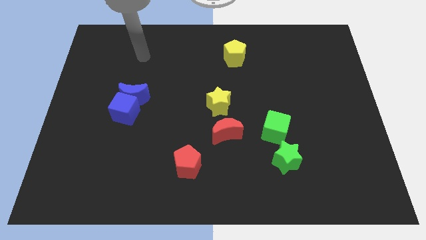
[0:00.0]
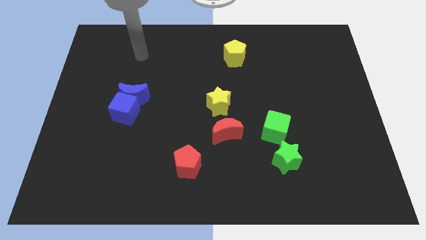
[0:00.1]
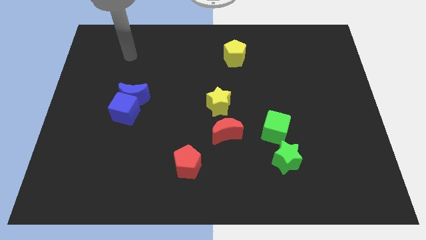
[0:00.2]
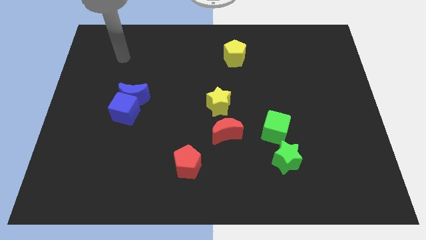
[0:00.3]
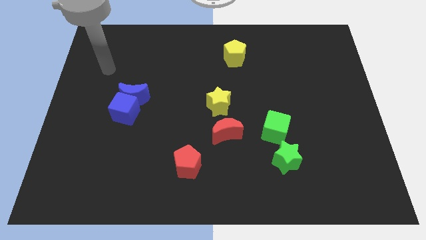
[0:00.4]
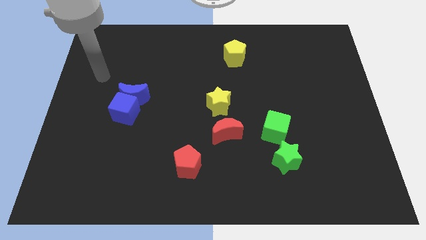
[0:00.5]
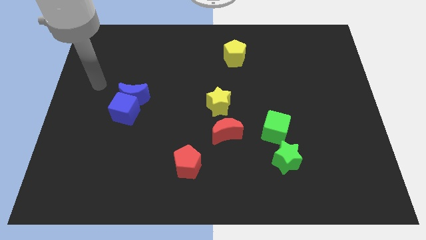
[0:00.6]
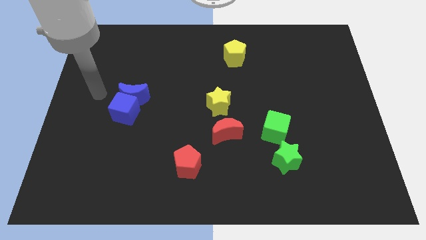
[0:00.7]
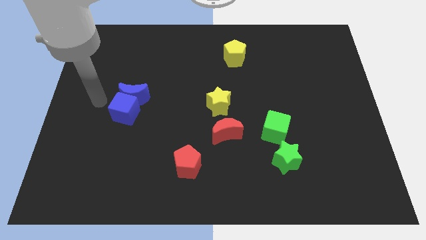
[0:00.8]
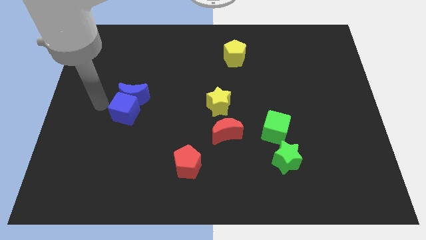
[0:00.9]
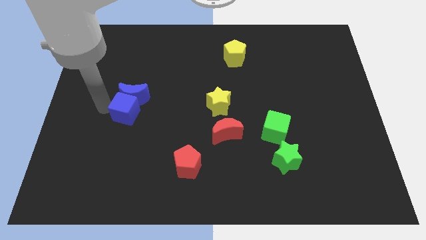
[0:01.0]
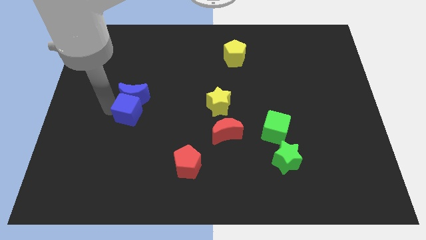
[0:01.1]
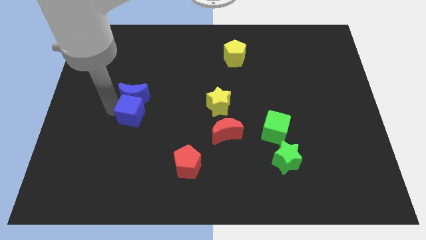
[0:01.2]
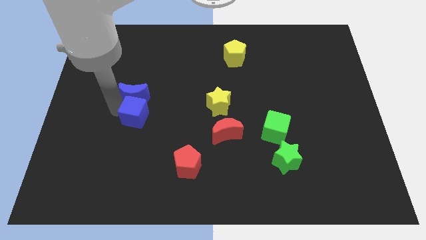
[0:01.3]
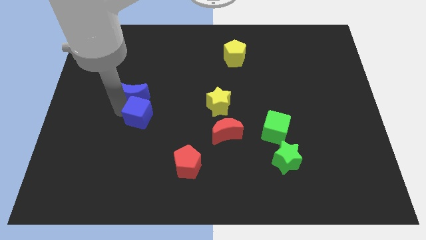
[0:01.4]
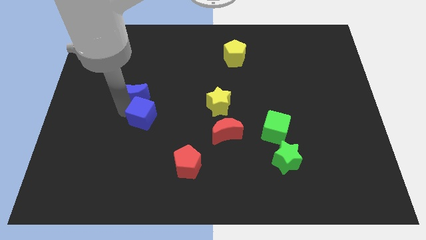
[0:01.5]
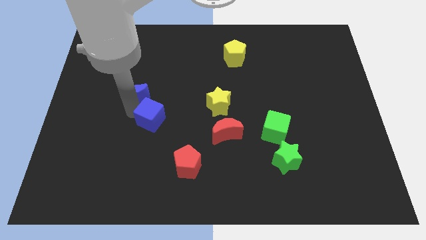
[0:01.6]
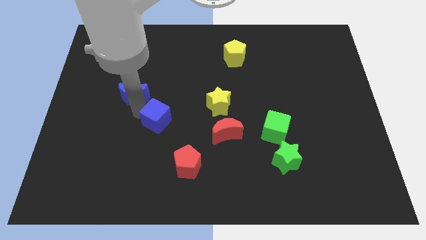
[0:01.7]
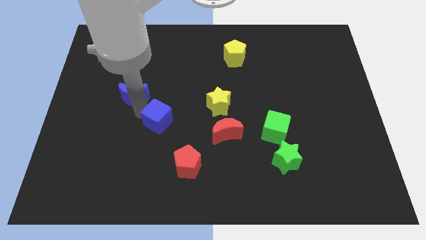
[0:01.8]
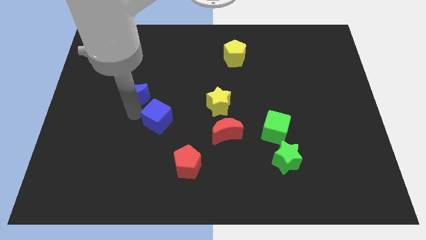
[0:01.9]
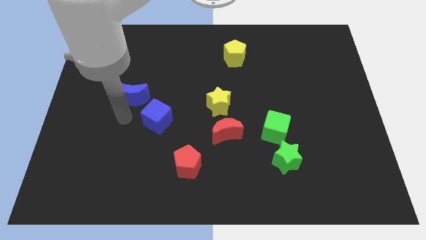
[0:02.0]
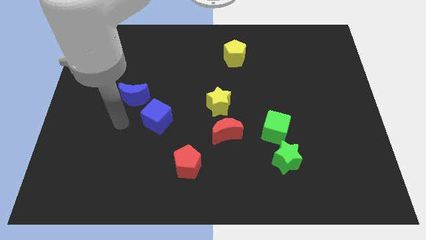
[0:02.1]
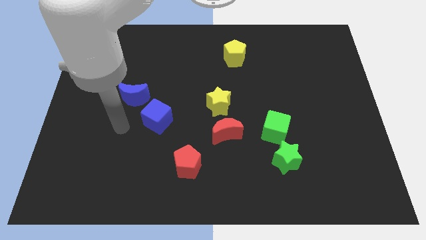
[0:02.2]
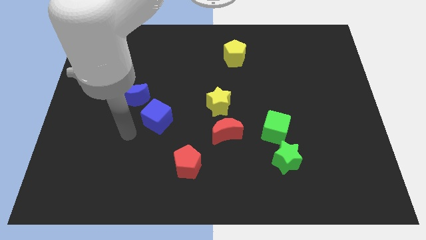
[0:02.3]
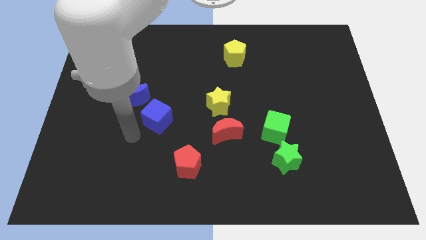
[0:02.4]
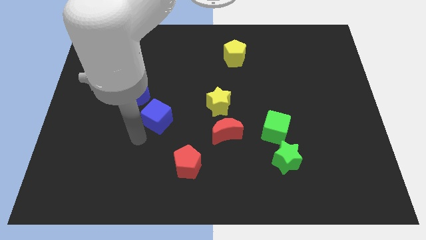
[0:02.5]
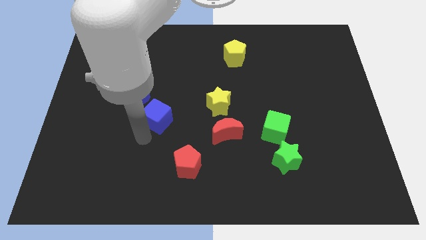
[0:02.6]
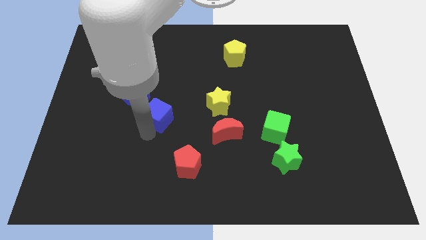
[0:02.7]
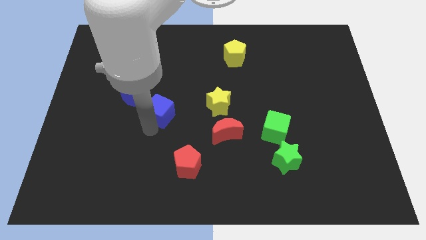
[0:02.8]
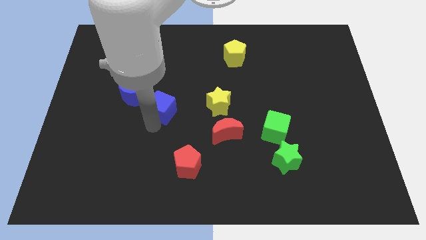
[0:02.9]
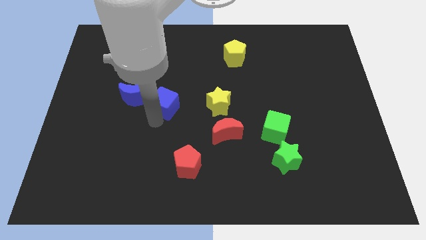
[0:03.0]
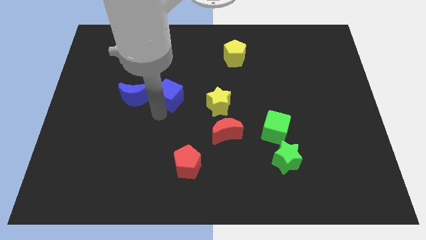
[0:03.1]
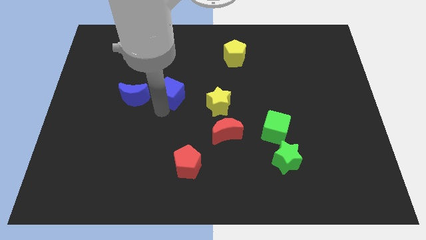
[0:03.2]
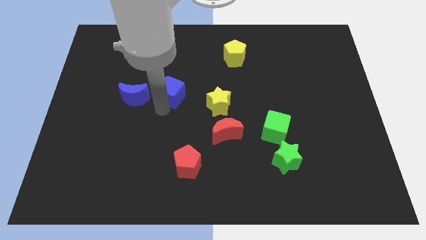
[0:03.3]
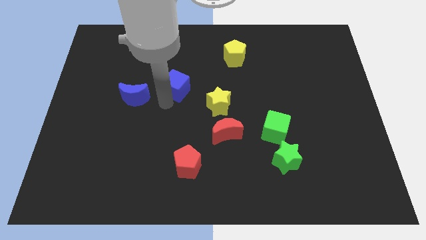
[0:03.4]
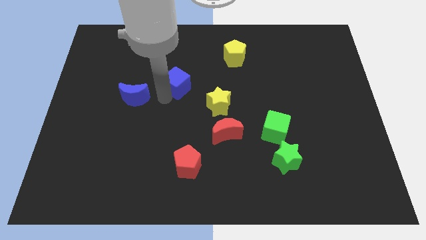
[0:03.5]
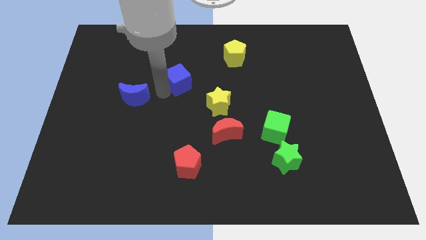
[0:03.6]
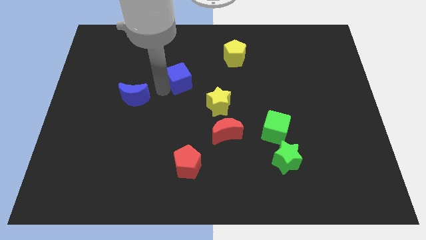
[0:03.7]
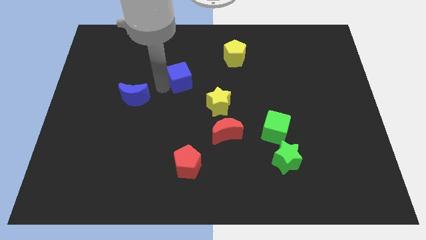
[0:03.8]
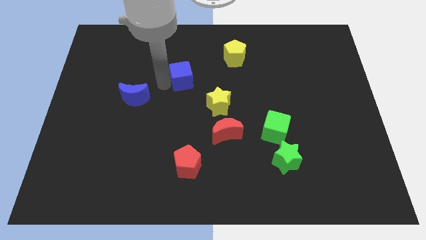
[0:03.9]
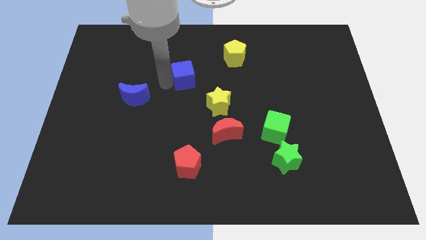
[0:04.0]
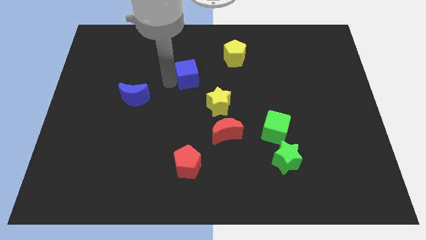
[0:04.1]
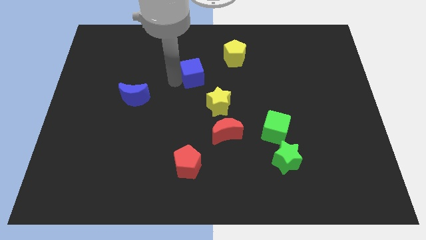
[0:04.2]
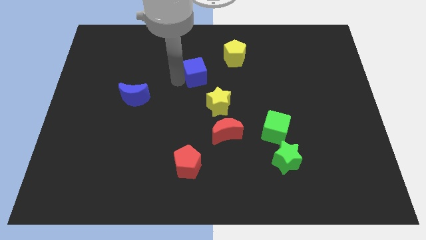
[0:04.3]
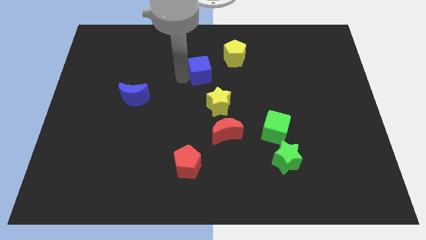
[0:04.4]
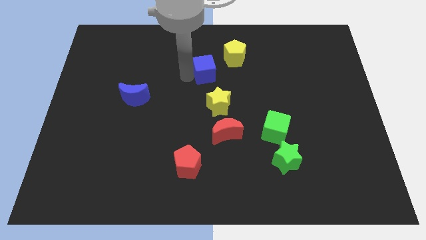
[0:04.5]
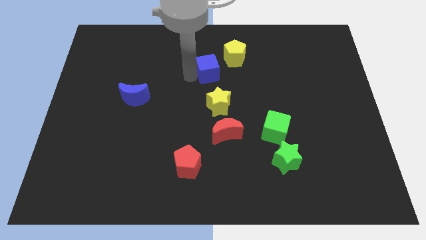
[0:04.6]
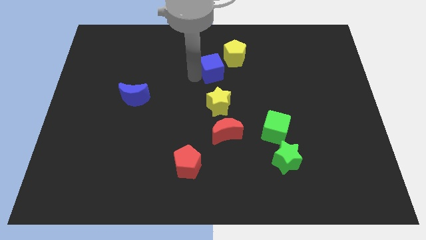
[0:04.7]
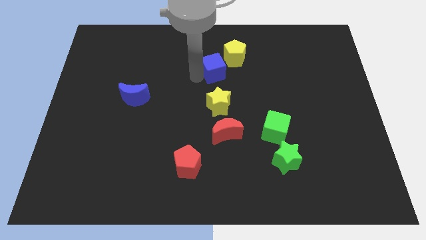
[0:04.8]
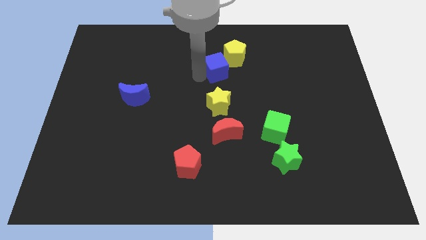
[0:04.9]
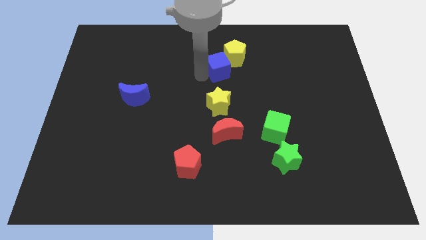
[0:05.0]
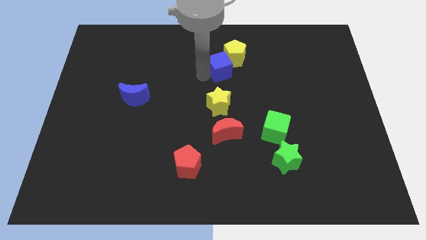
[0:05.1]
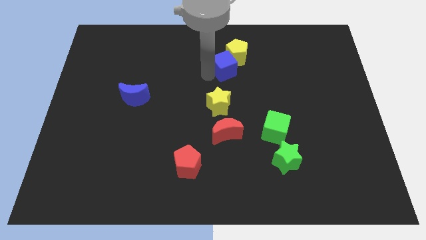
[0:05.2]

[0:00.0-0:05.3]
push the blue cube to the yellow pentagon

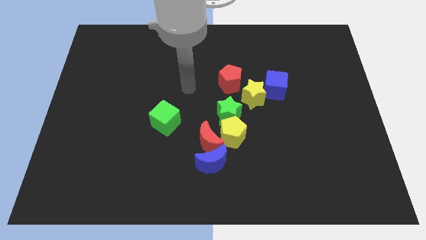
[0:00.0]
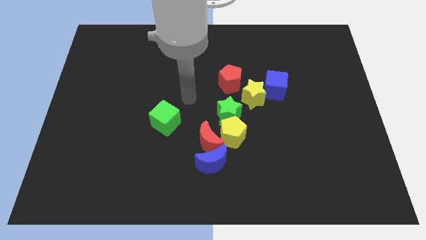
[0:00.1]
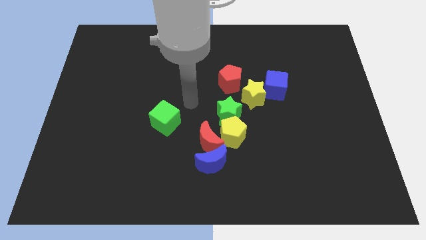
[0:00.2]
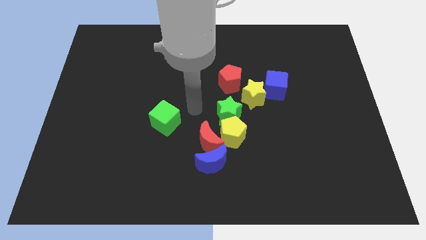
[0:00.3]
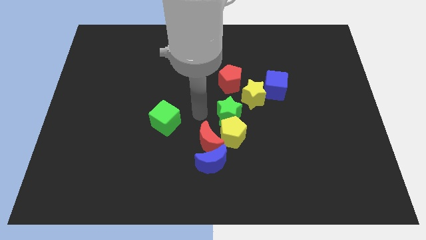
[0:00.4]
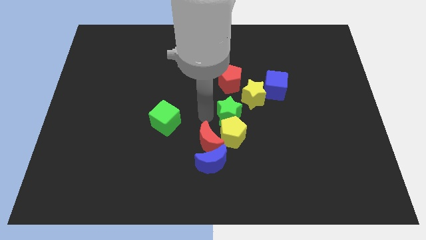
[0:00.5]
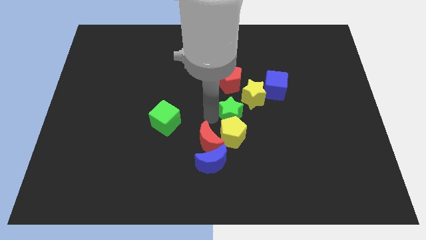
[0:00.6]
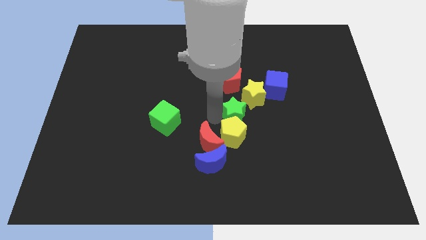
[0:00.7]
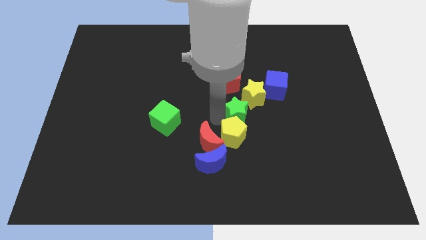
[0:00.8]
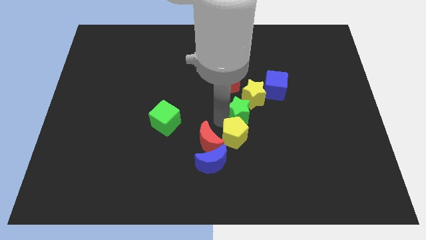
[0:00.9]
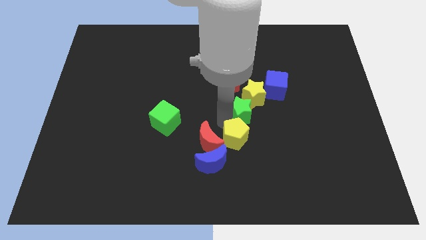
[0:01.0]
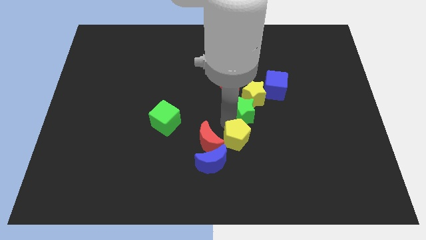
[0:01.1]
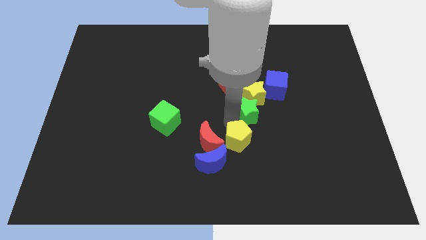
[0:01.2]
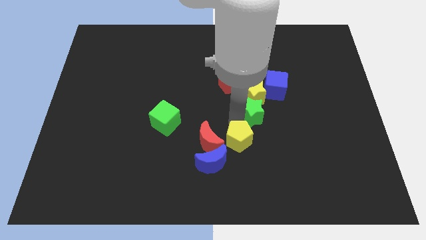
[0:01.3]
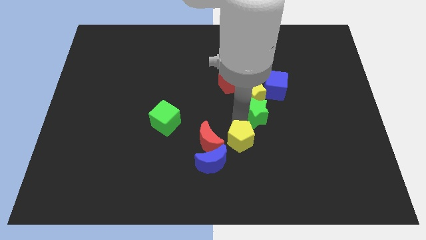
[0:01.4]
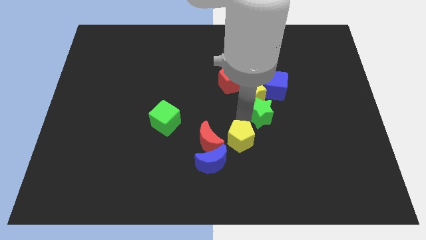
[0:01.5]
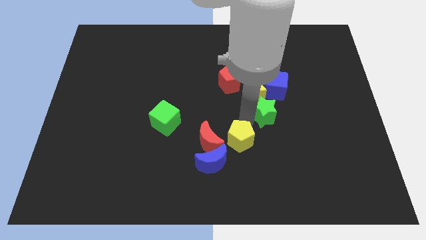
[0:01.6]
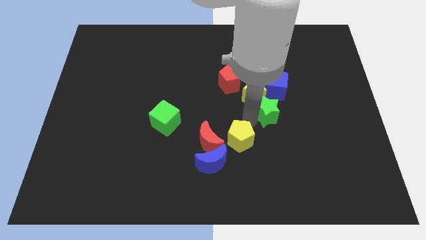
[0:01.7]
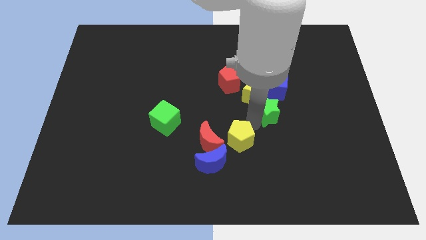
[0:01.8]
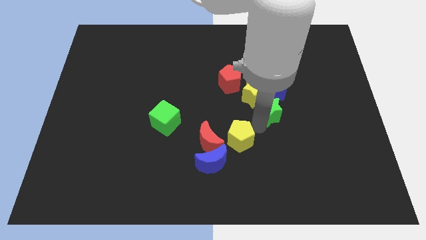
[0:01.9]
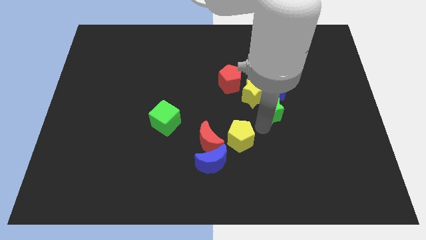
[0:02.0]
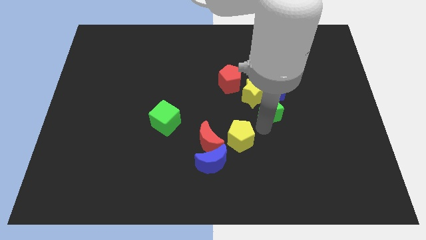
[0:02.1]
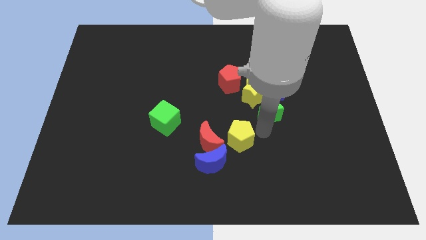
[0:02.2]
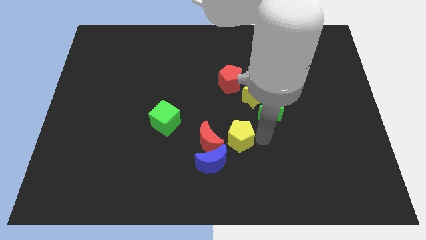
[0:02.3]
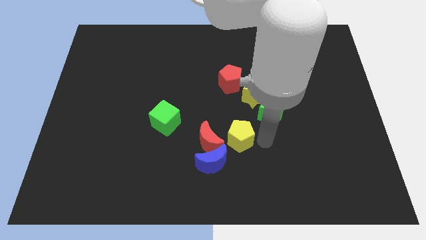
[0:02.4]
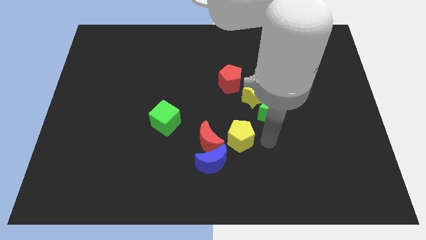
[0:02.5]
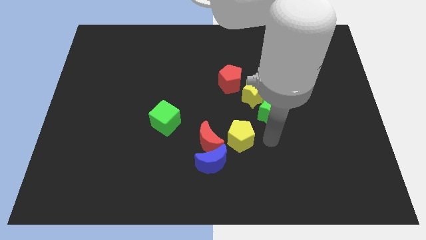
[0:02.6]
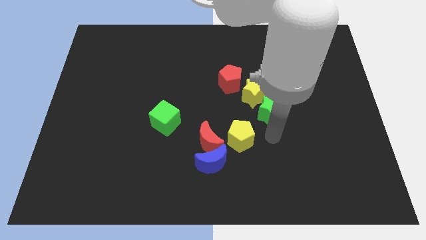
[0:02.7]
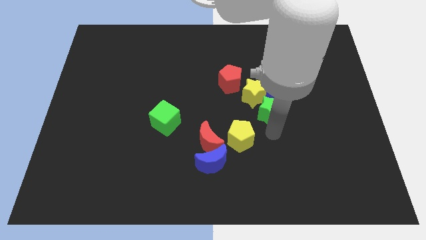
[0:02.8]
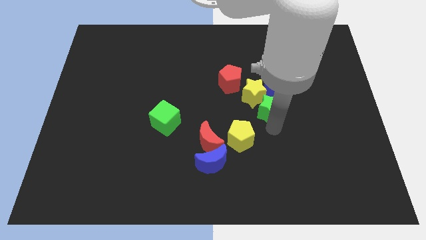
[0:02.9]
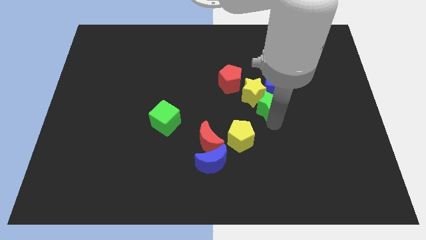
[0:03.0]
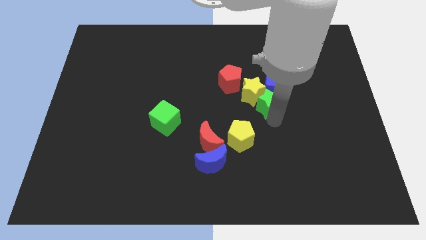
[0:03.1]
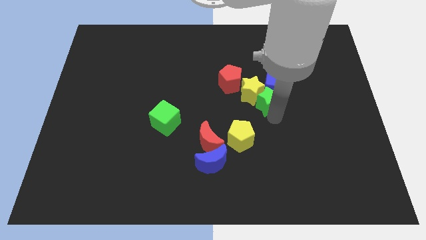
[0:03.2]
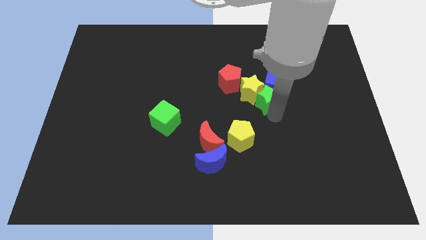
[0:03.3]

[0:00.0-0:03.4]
put the green star next to the blue cube
